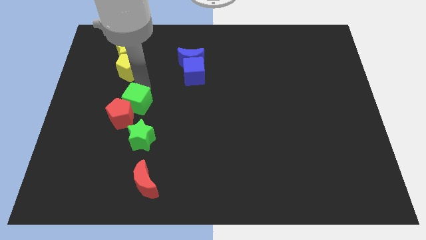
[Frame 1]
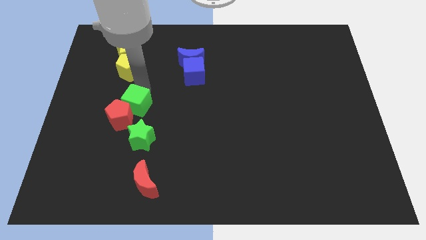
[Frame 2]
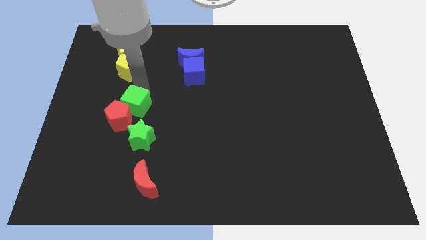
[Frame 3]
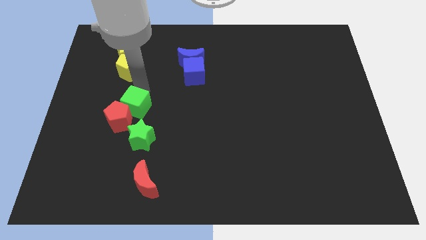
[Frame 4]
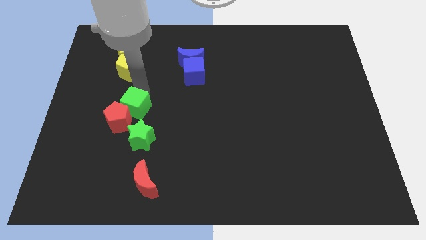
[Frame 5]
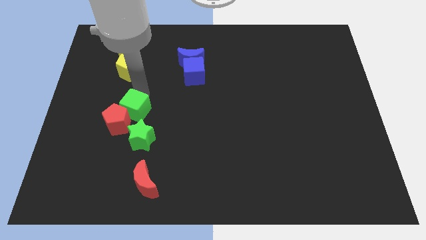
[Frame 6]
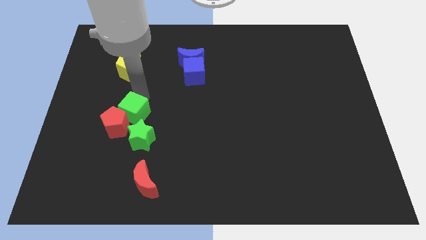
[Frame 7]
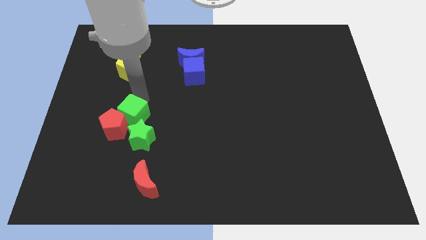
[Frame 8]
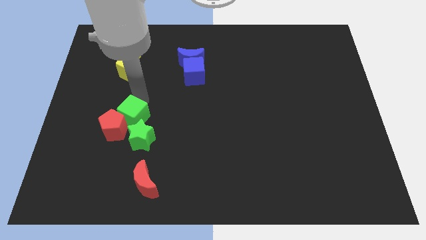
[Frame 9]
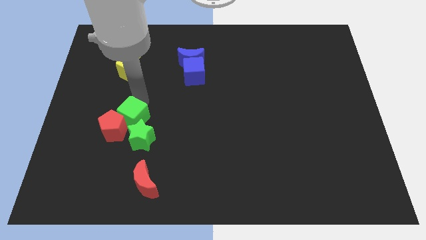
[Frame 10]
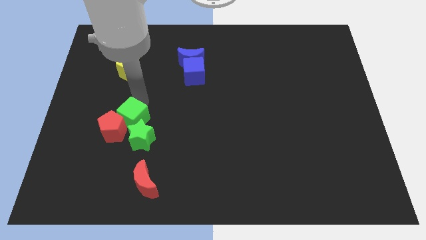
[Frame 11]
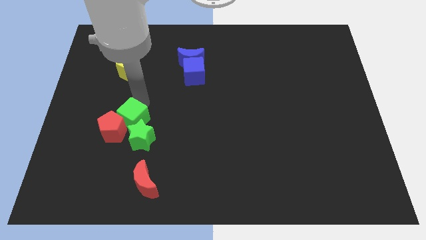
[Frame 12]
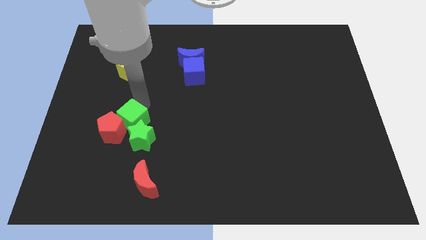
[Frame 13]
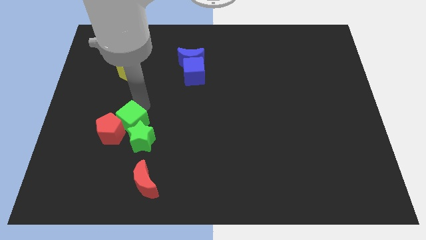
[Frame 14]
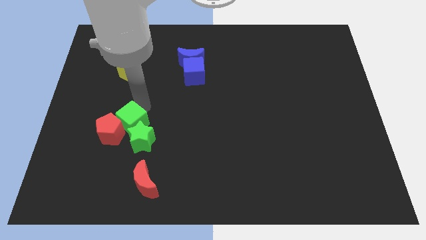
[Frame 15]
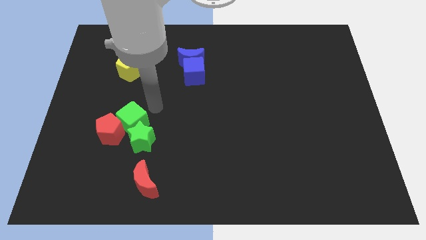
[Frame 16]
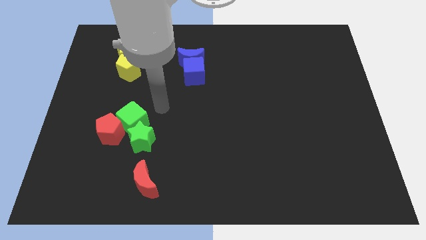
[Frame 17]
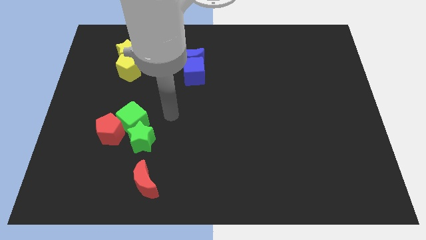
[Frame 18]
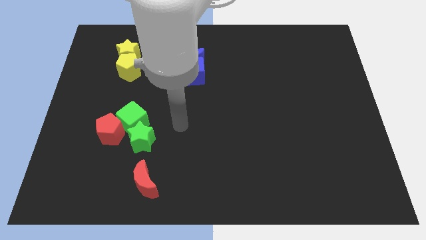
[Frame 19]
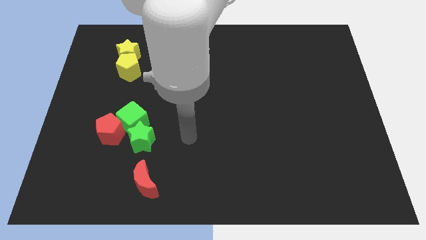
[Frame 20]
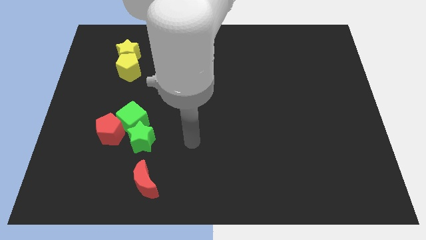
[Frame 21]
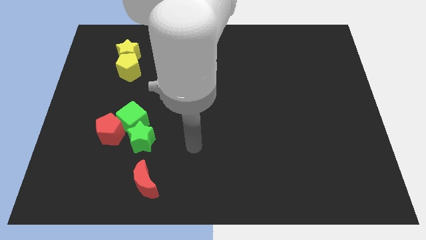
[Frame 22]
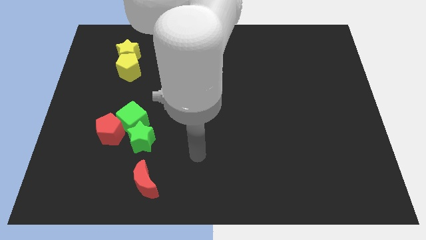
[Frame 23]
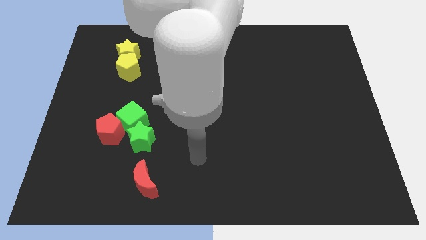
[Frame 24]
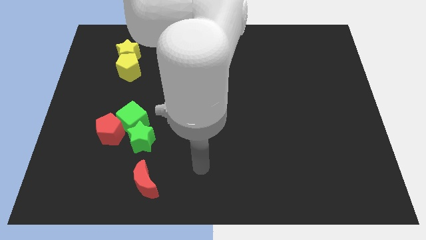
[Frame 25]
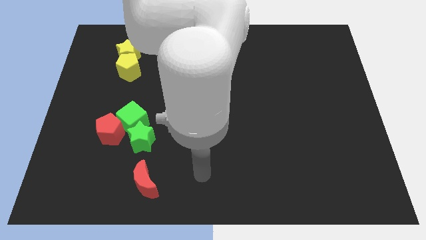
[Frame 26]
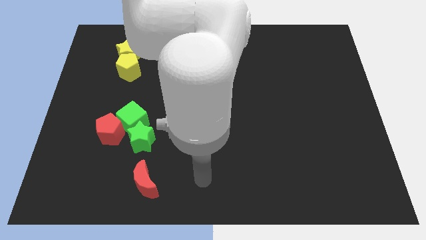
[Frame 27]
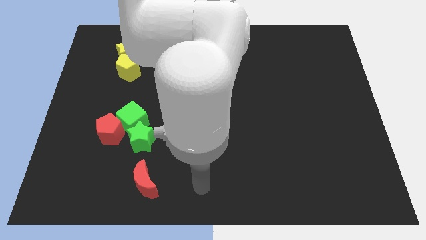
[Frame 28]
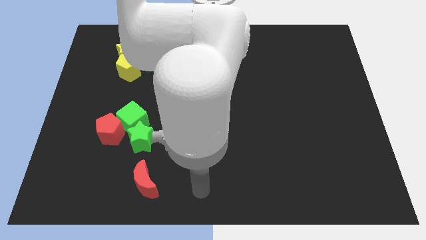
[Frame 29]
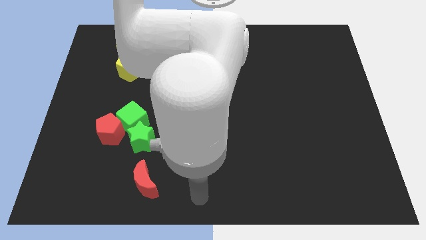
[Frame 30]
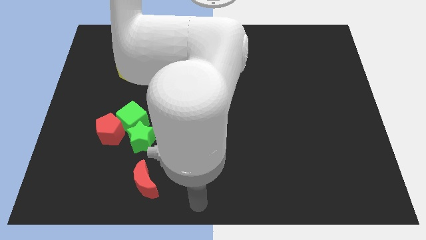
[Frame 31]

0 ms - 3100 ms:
group up the two green blocks

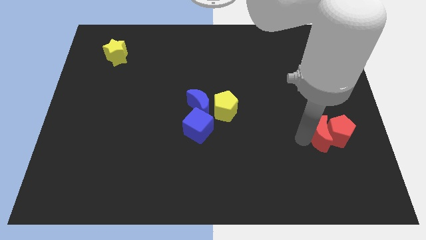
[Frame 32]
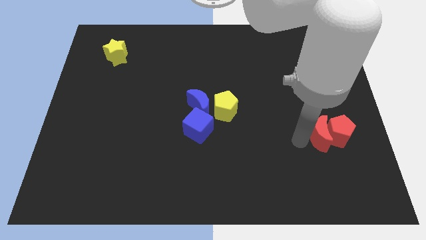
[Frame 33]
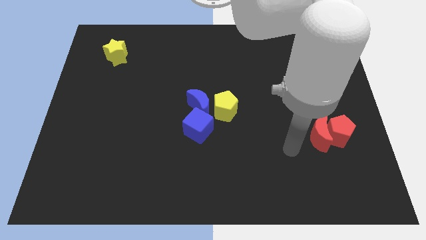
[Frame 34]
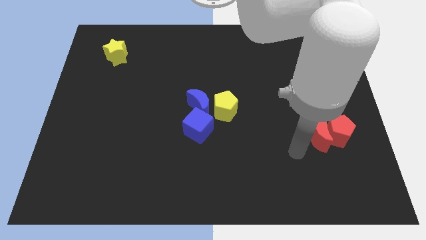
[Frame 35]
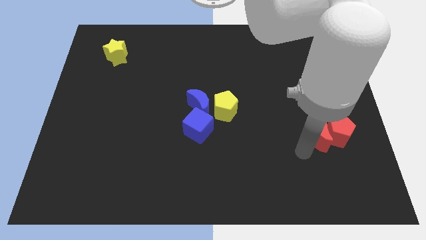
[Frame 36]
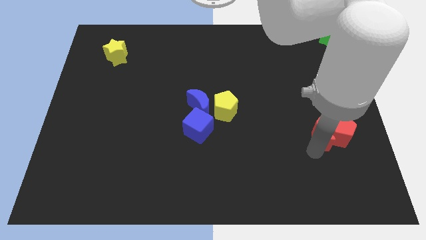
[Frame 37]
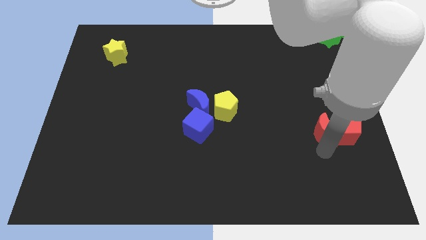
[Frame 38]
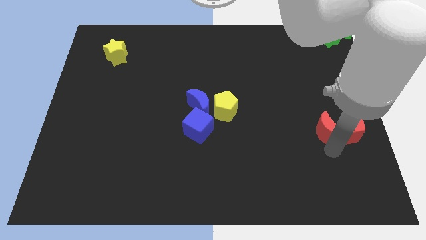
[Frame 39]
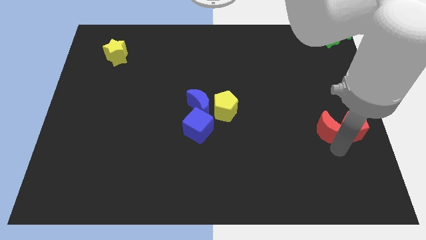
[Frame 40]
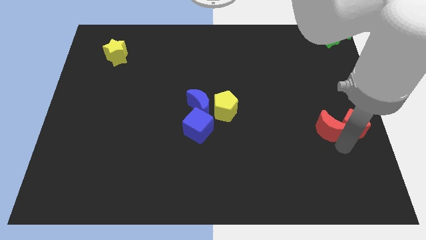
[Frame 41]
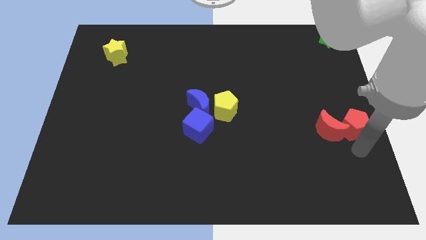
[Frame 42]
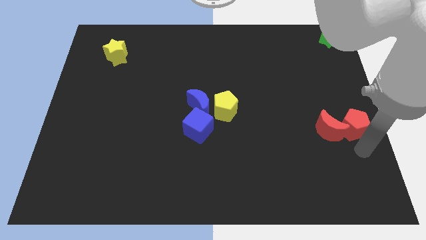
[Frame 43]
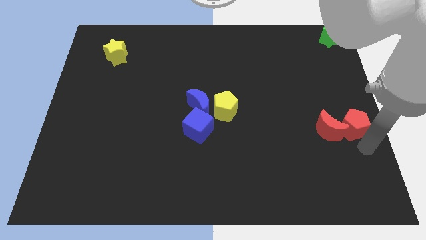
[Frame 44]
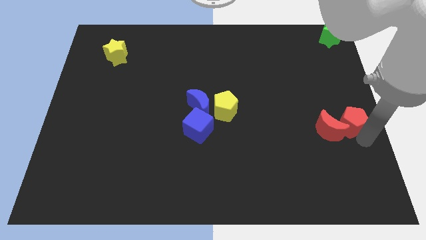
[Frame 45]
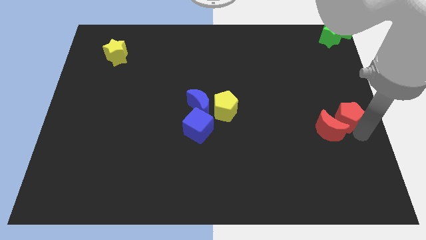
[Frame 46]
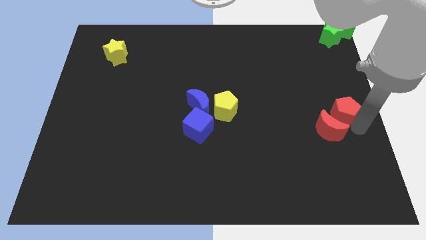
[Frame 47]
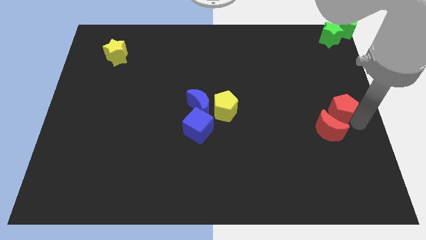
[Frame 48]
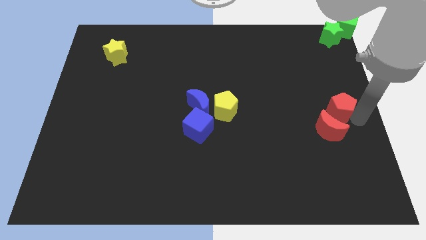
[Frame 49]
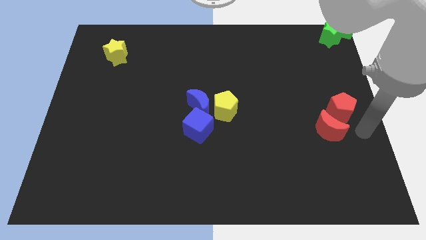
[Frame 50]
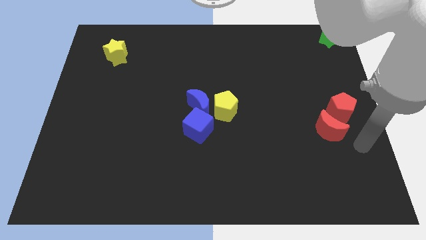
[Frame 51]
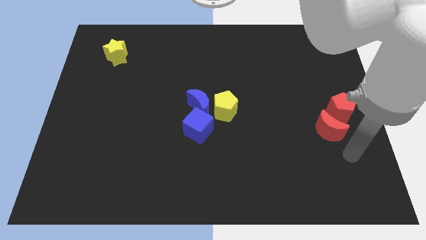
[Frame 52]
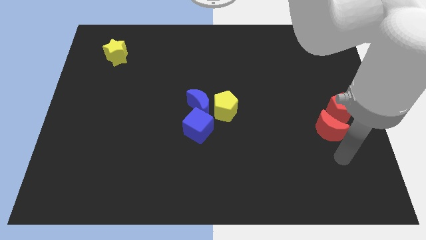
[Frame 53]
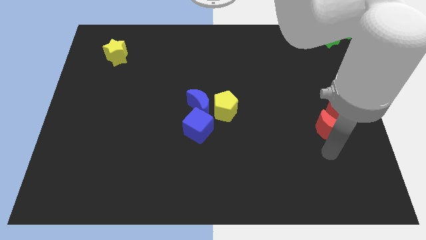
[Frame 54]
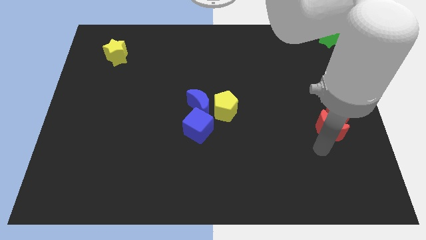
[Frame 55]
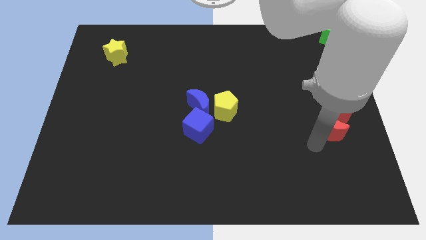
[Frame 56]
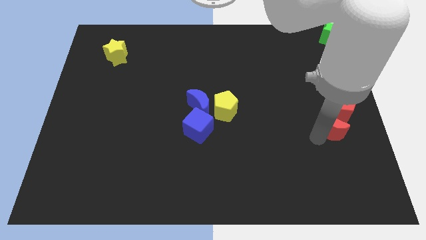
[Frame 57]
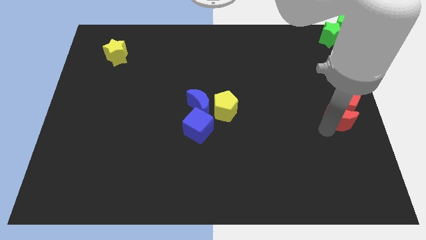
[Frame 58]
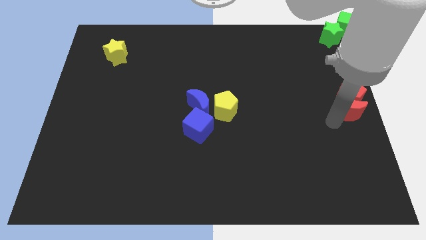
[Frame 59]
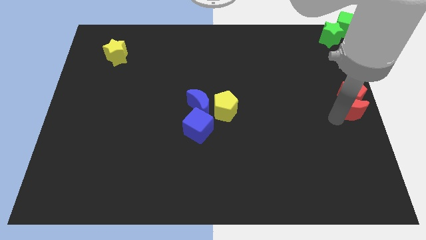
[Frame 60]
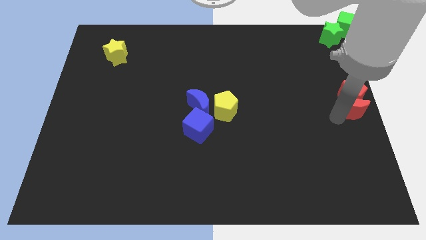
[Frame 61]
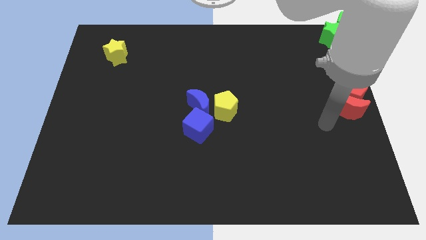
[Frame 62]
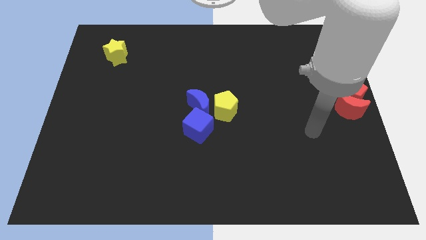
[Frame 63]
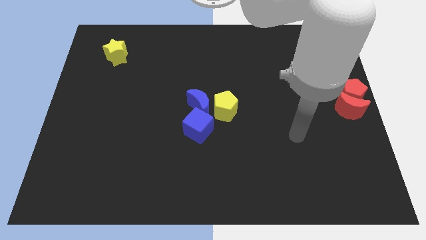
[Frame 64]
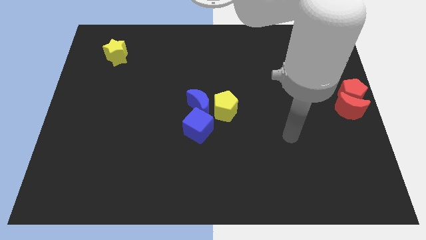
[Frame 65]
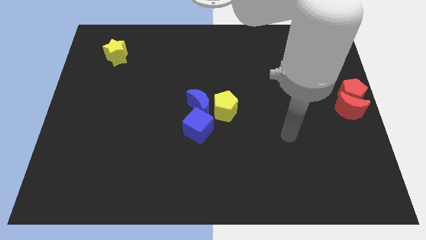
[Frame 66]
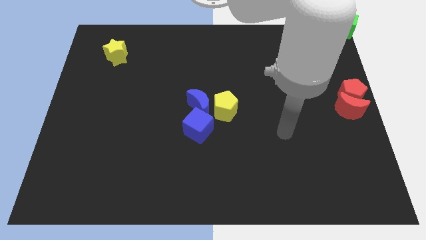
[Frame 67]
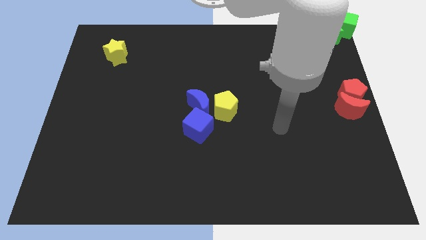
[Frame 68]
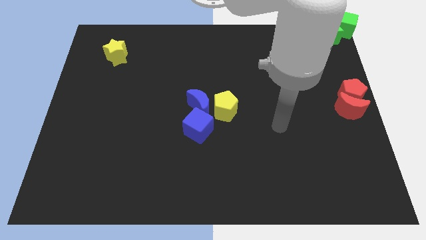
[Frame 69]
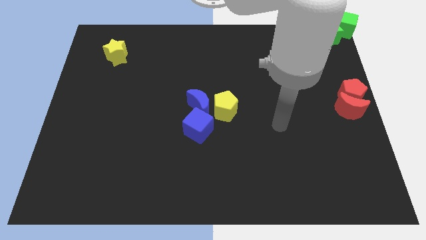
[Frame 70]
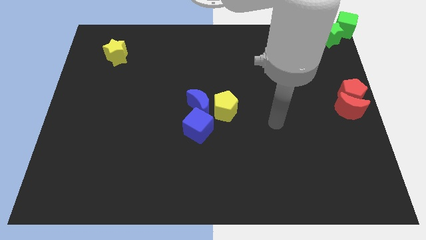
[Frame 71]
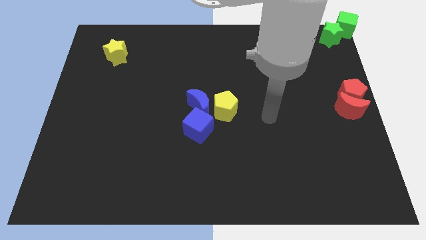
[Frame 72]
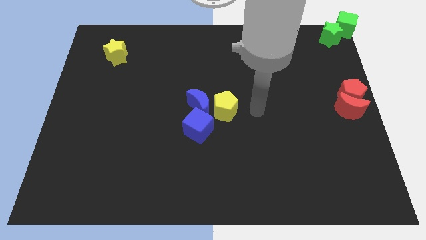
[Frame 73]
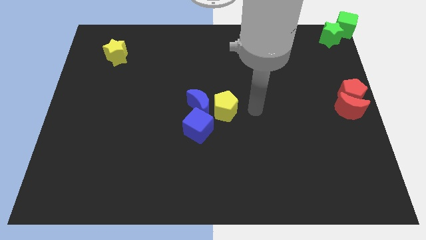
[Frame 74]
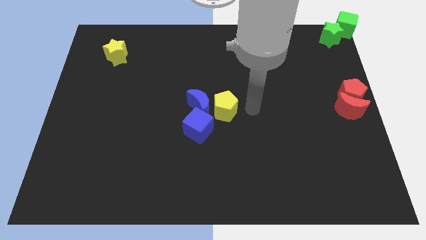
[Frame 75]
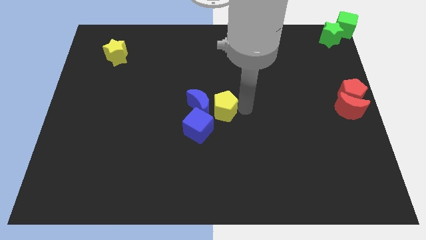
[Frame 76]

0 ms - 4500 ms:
place two red blocks to the right center of the board

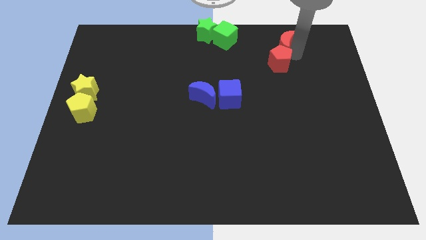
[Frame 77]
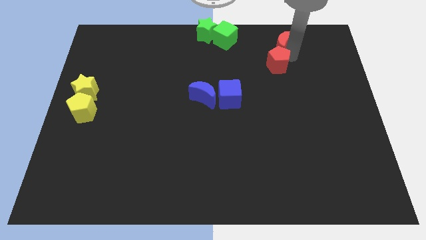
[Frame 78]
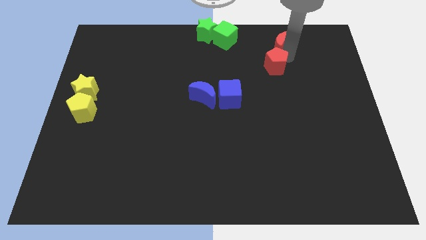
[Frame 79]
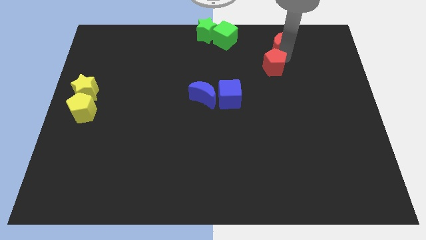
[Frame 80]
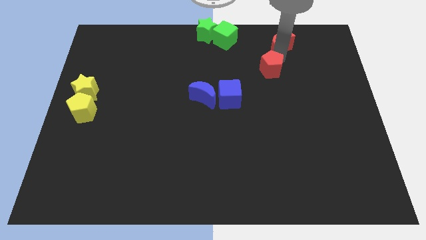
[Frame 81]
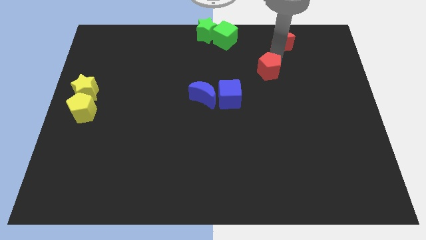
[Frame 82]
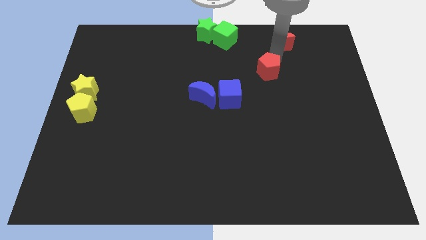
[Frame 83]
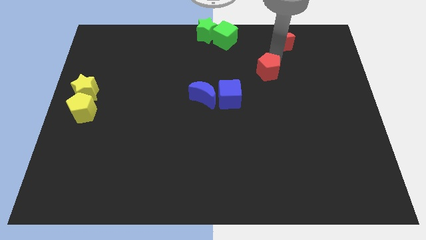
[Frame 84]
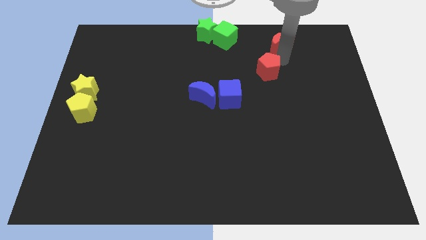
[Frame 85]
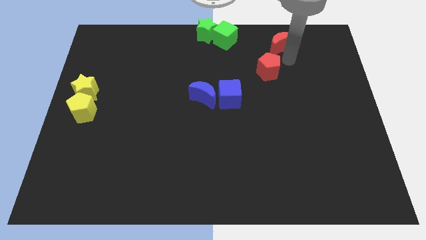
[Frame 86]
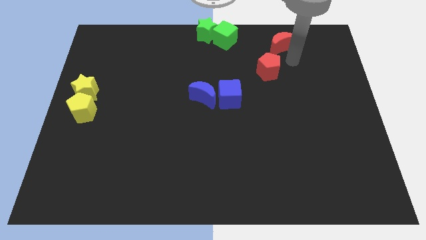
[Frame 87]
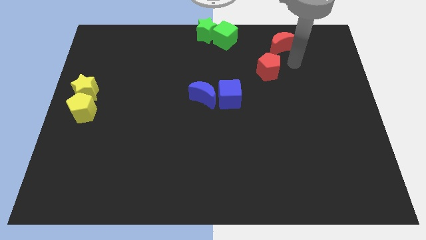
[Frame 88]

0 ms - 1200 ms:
separate the red pentagon from the red crescent

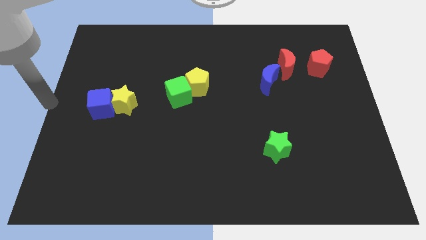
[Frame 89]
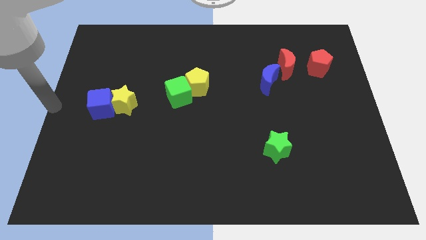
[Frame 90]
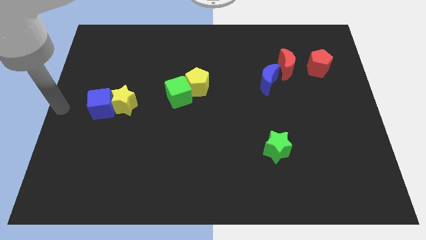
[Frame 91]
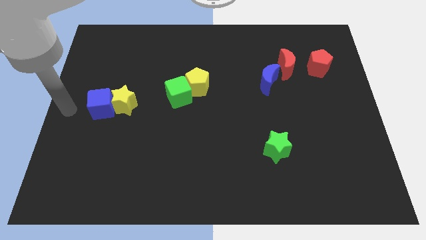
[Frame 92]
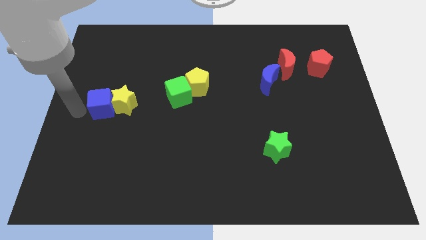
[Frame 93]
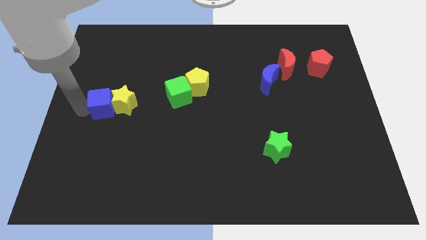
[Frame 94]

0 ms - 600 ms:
place your arm to the left side of blue cube
